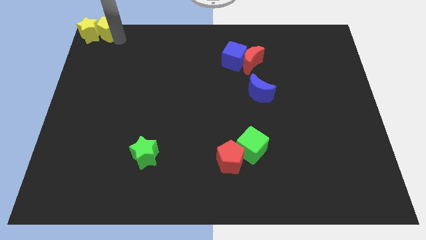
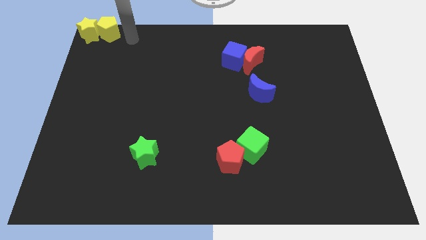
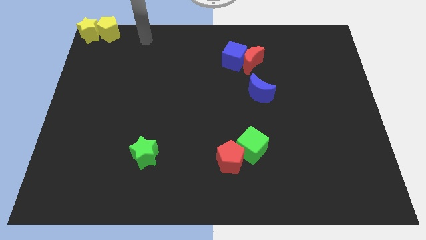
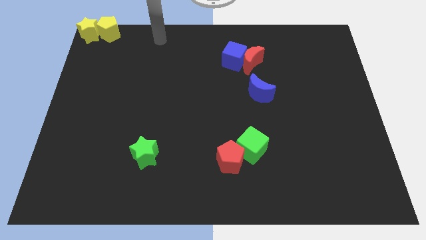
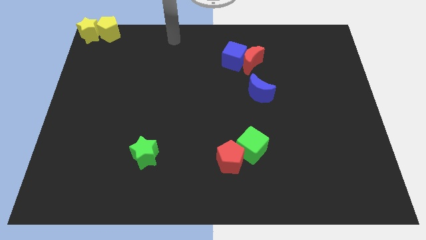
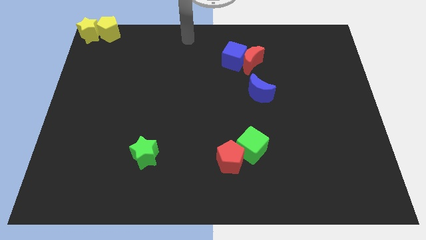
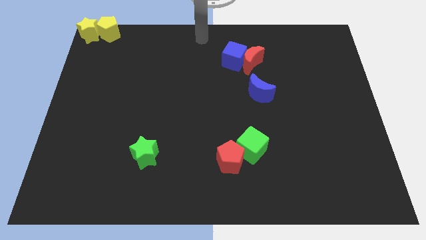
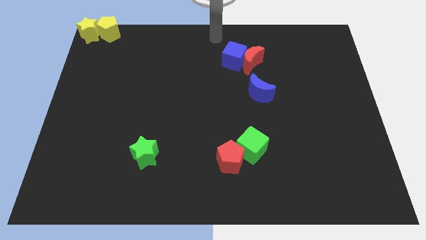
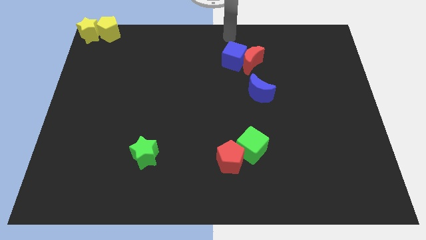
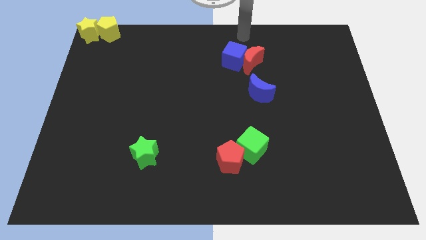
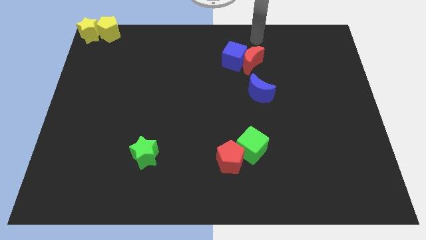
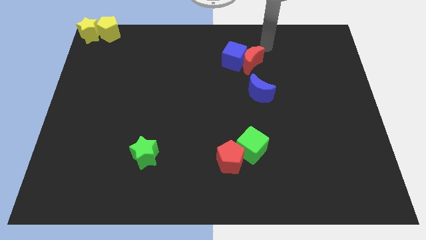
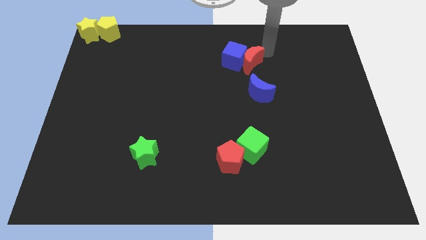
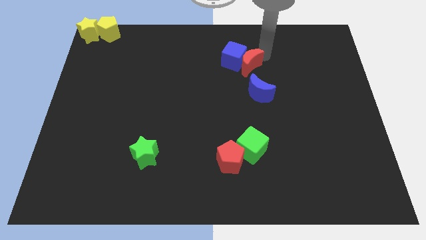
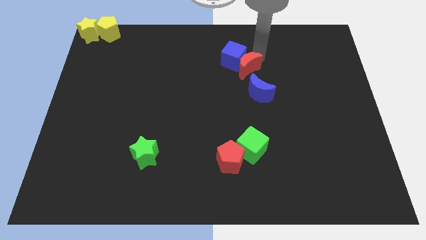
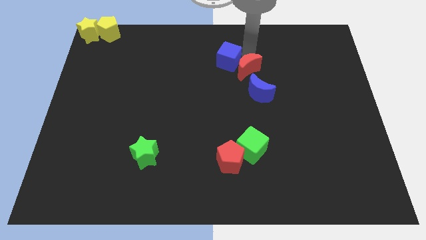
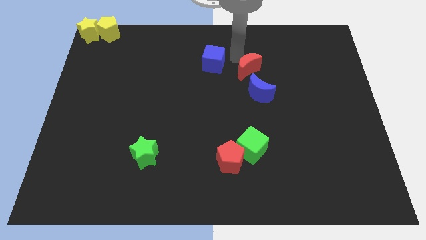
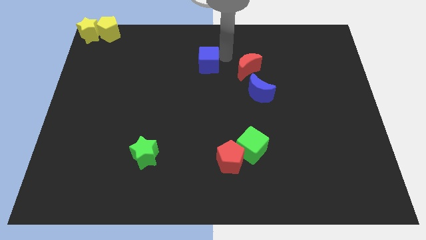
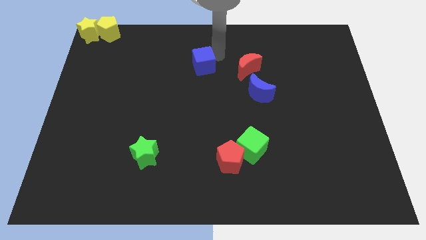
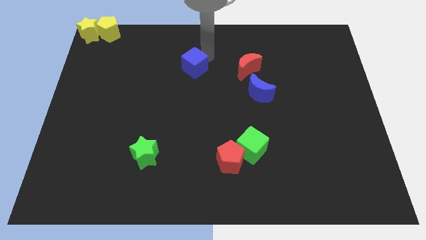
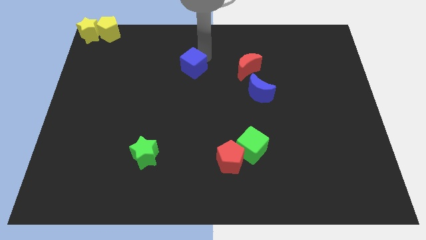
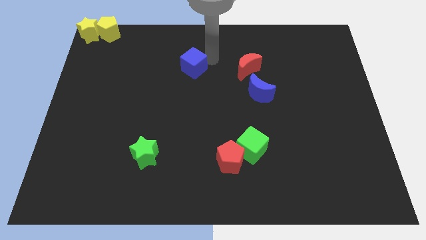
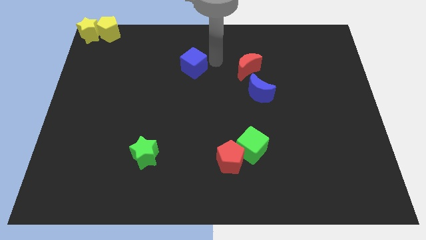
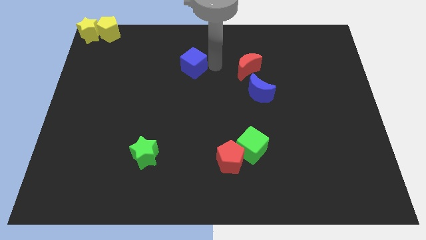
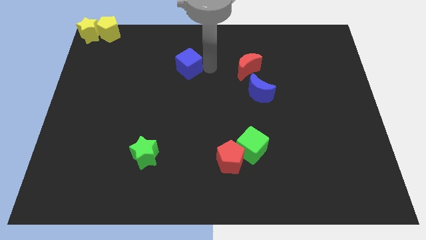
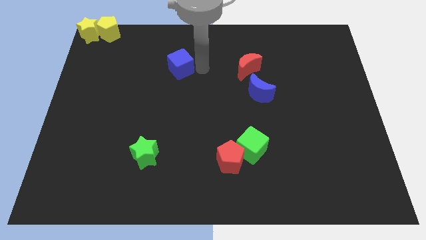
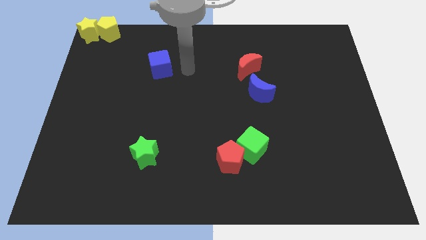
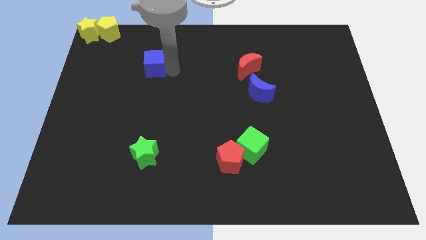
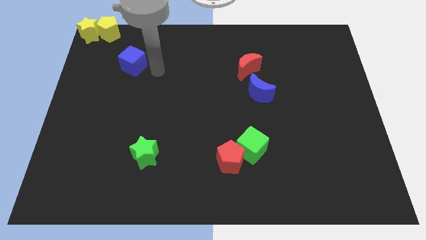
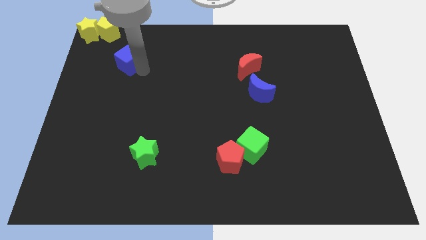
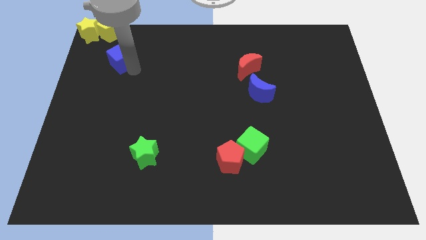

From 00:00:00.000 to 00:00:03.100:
move the arm away from the yellow pentagon

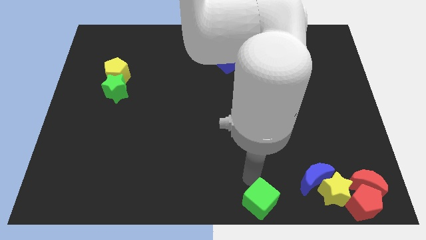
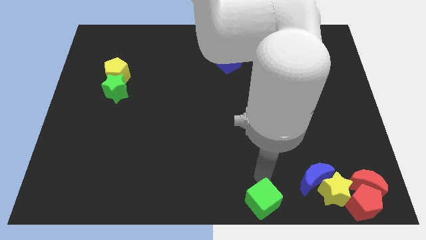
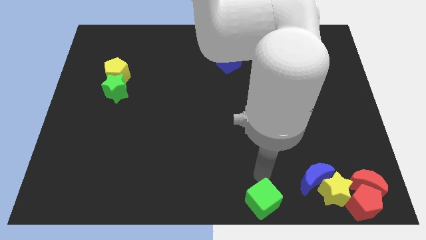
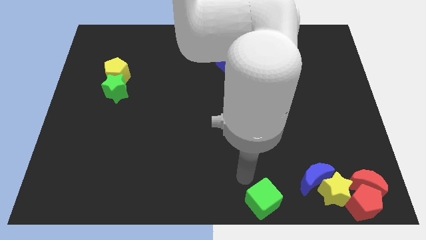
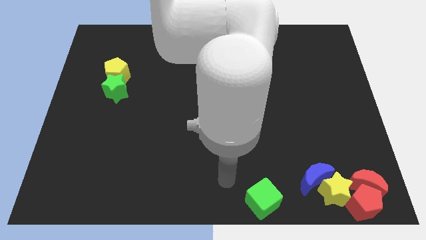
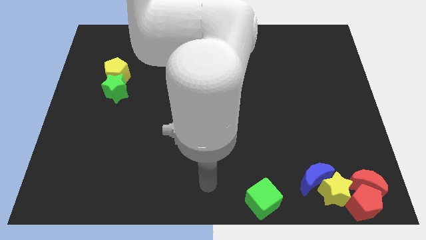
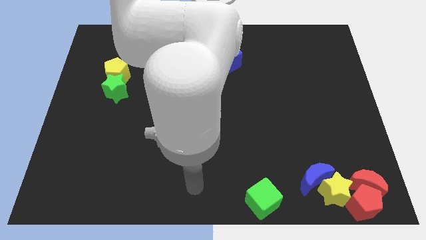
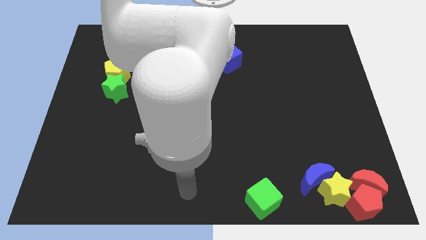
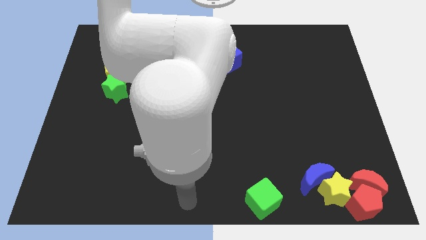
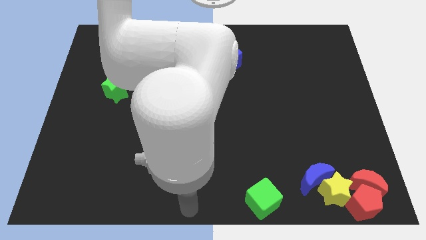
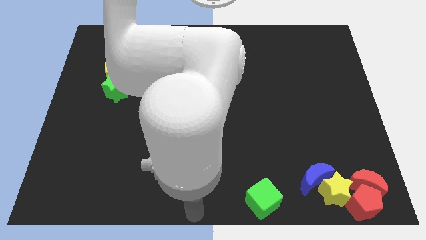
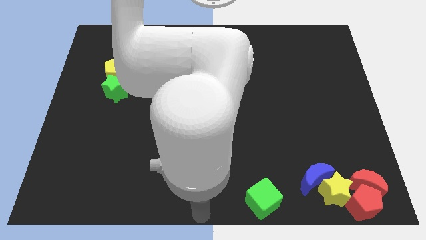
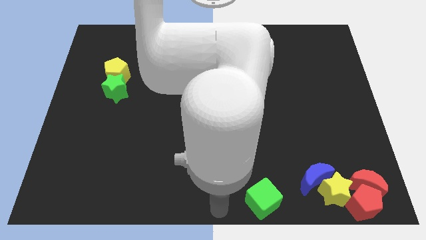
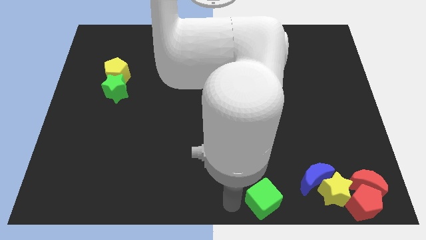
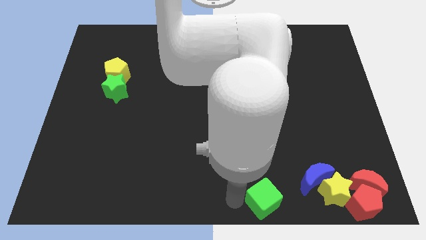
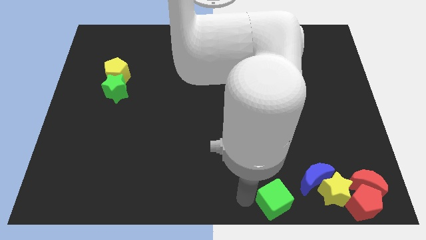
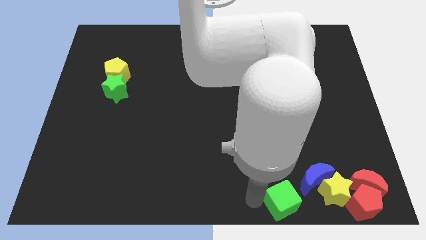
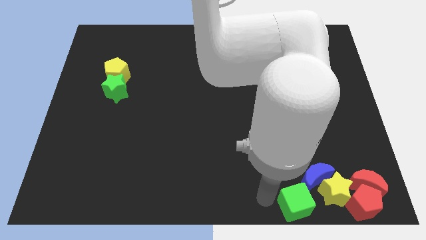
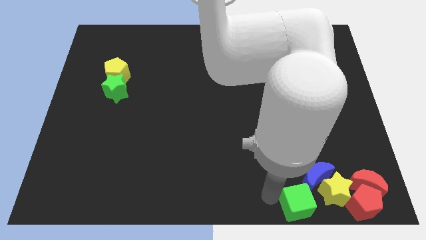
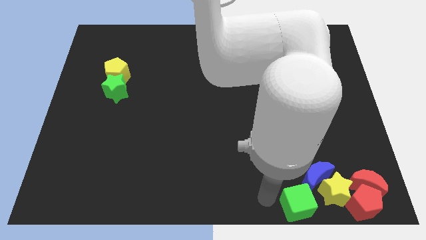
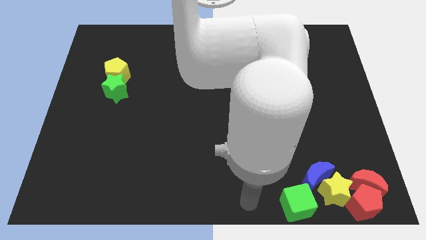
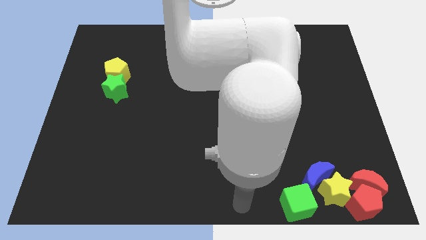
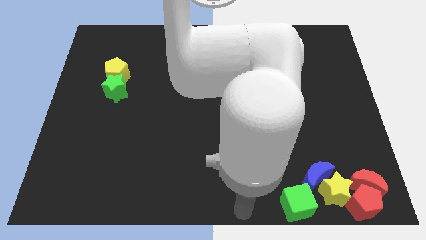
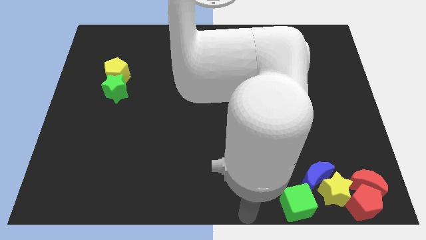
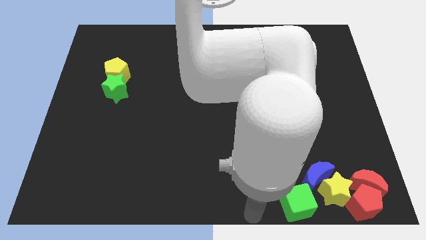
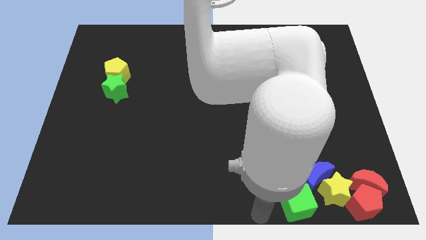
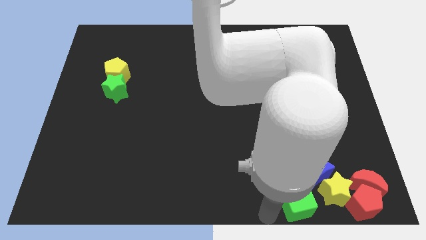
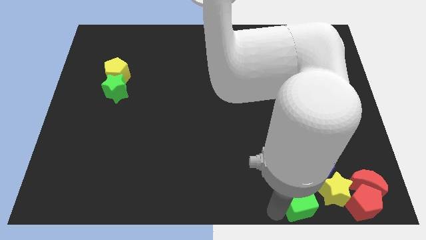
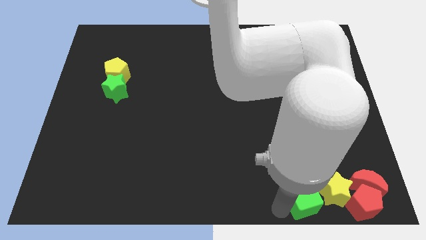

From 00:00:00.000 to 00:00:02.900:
push the green cube into the group of objects

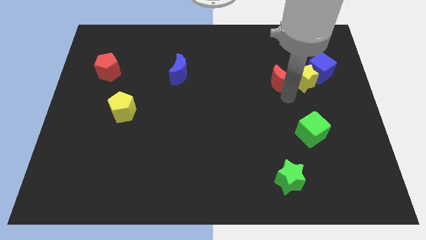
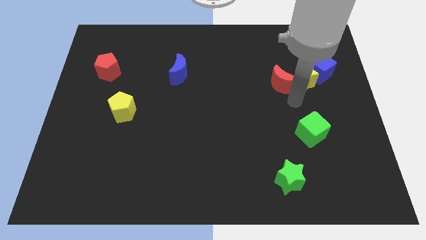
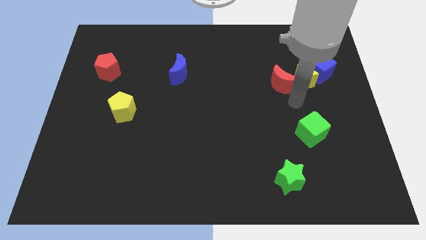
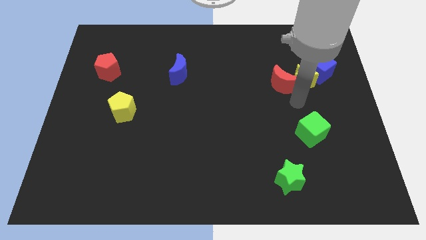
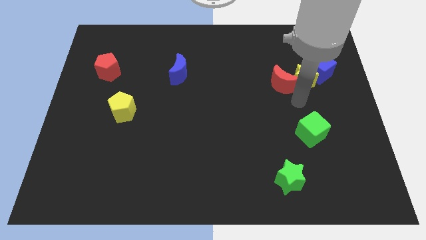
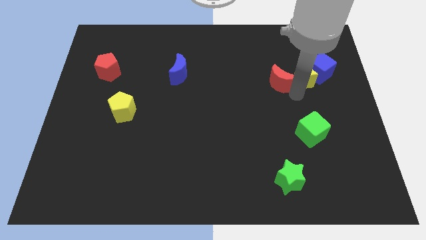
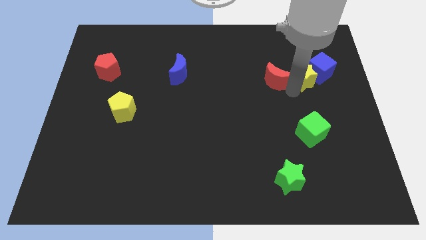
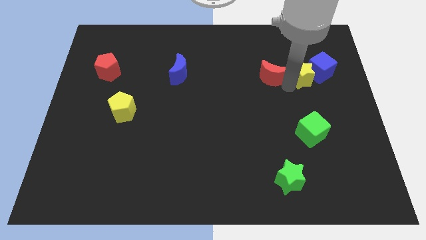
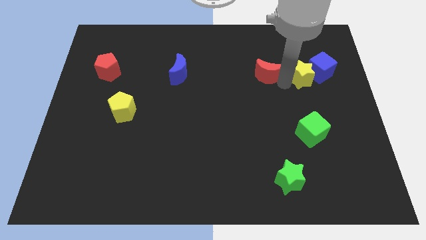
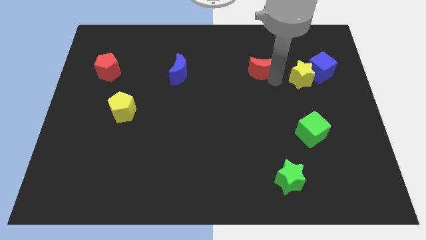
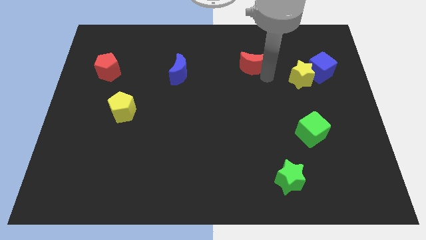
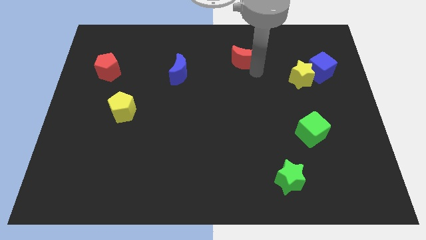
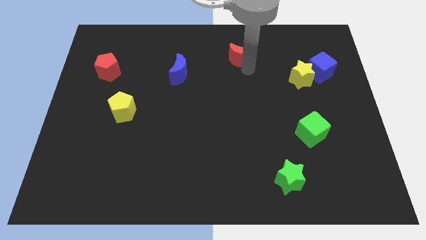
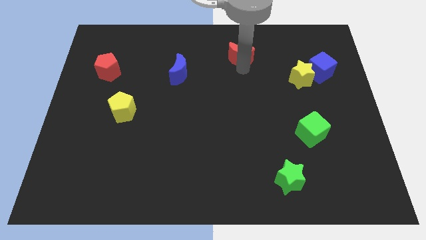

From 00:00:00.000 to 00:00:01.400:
separate the red crescent from the yellow star

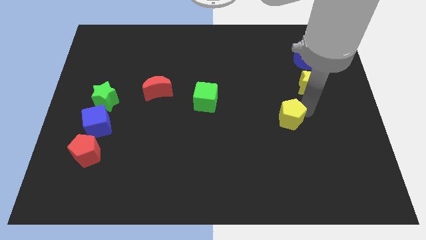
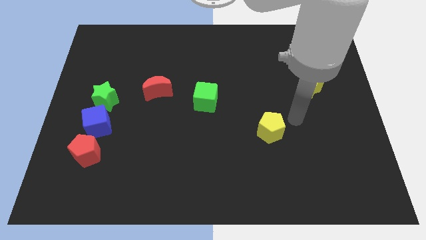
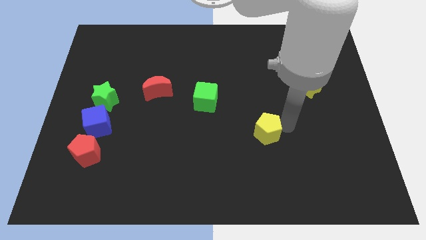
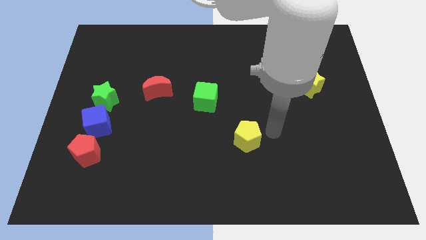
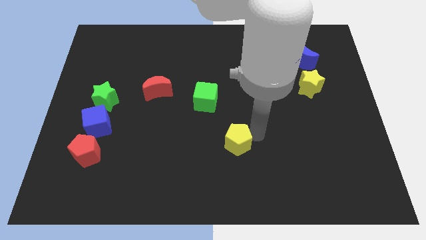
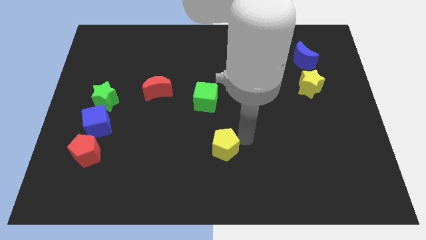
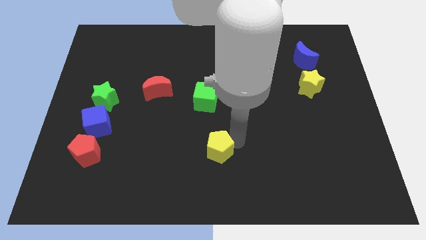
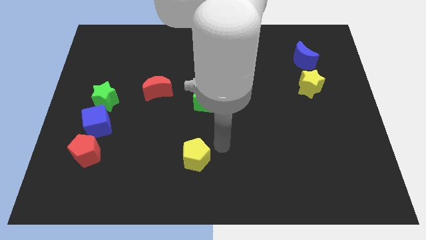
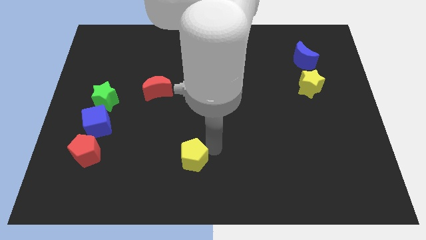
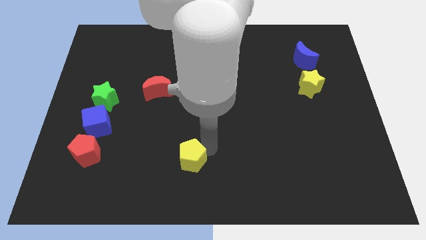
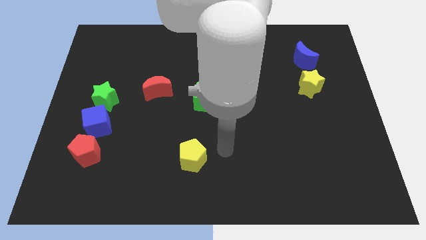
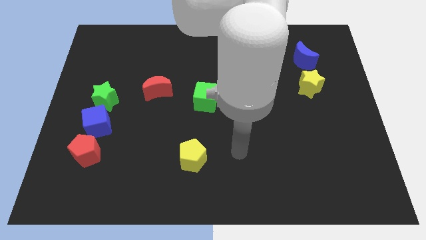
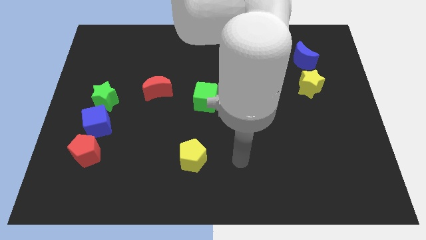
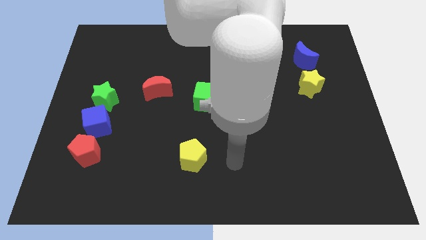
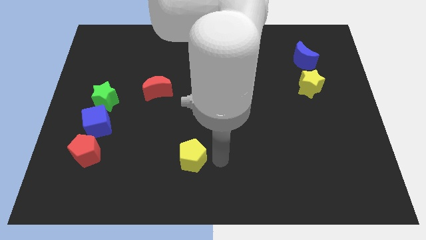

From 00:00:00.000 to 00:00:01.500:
move yellow pentagon to the right of red pentagon
